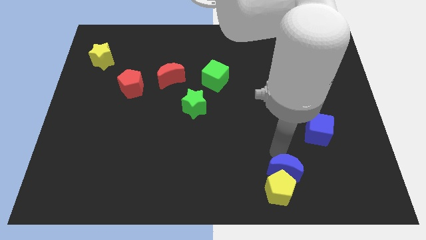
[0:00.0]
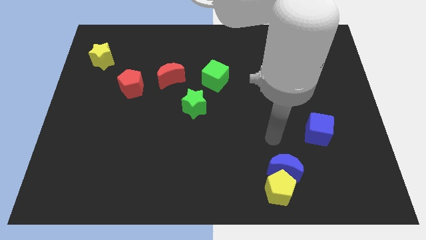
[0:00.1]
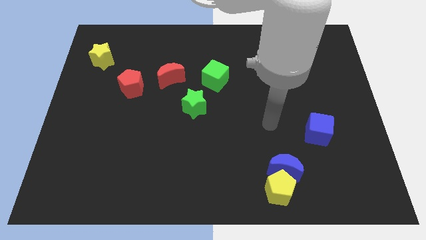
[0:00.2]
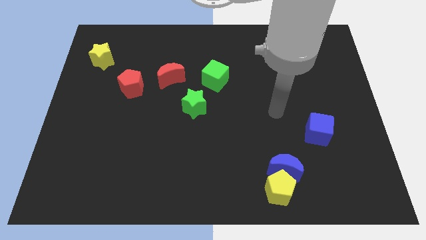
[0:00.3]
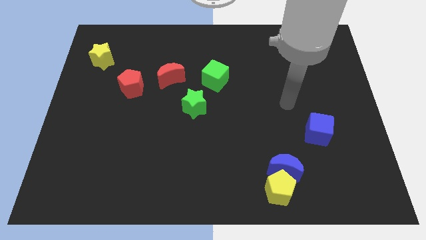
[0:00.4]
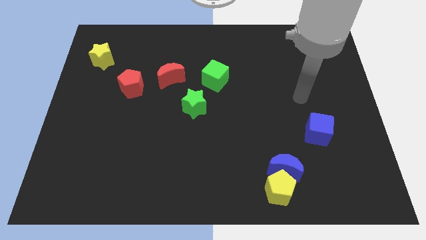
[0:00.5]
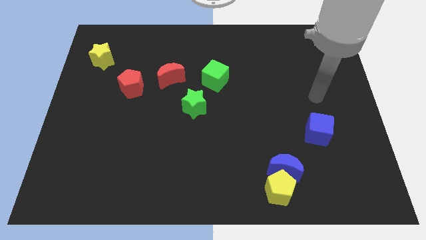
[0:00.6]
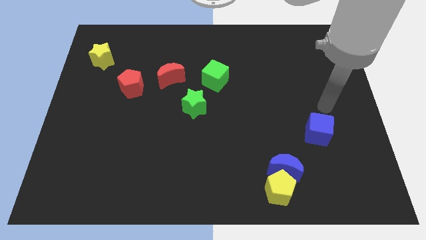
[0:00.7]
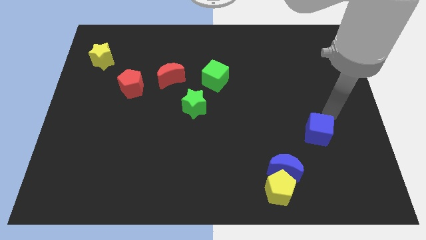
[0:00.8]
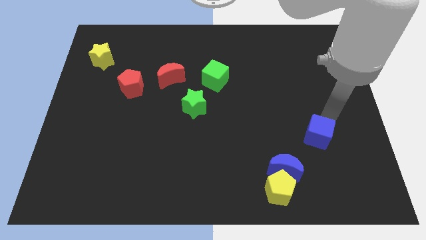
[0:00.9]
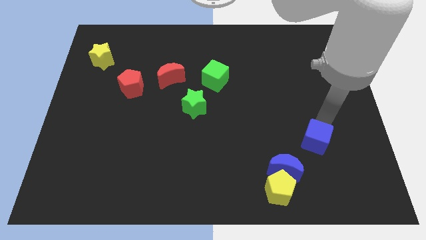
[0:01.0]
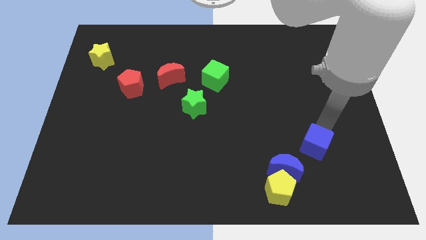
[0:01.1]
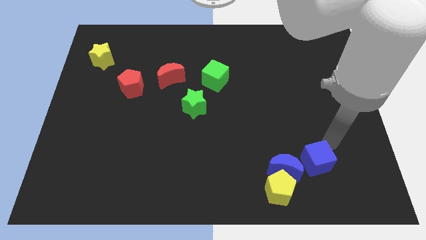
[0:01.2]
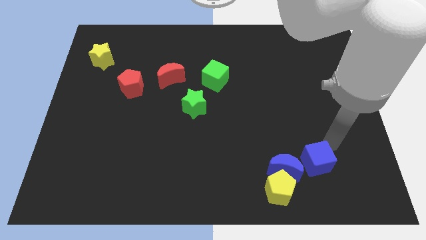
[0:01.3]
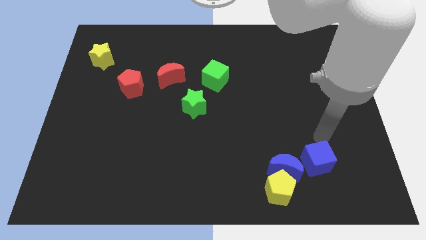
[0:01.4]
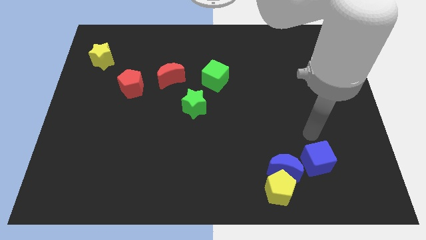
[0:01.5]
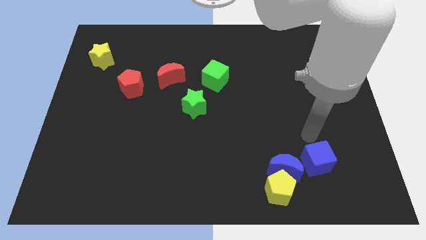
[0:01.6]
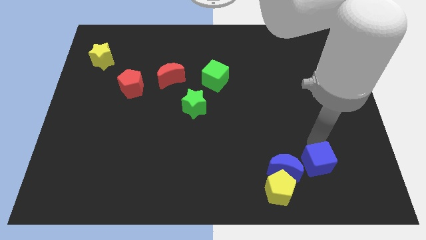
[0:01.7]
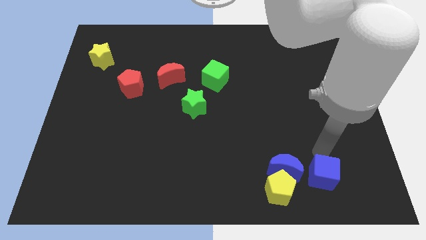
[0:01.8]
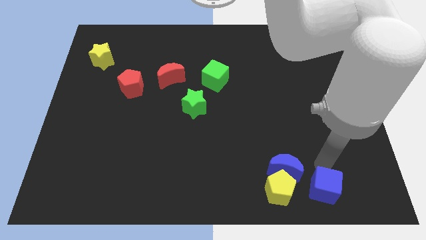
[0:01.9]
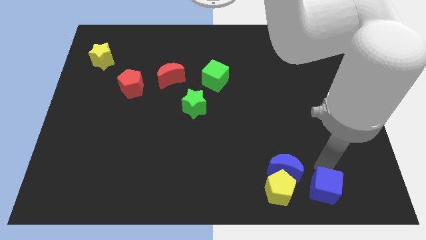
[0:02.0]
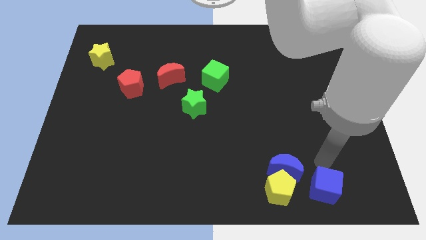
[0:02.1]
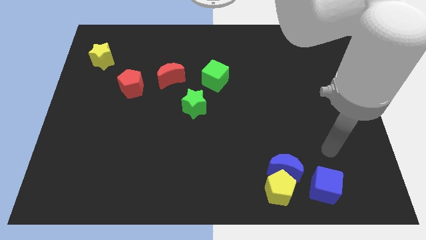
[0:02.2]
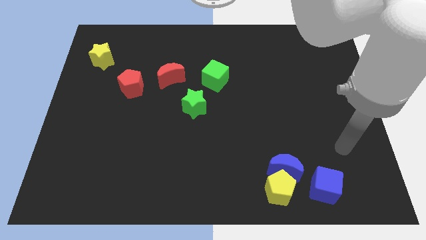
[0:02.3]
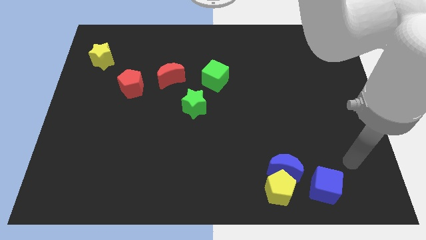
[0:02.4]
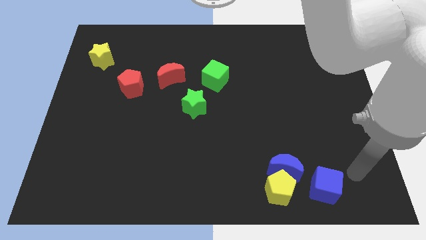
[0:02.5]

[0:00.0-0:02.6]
push blue cube parallel to the right of yellow pentagon

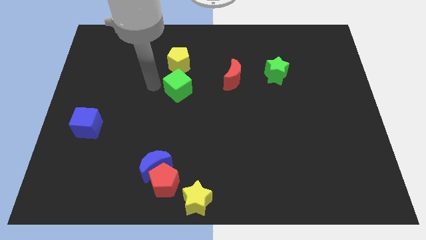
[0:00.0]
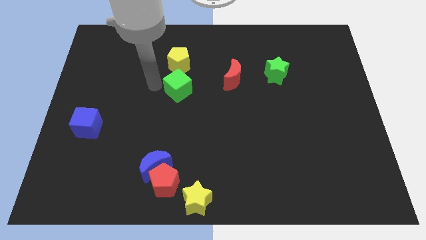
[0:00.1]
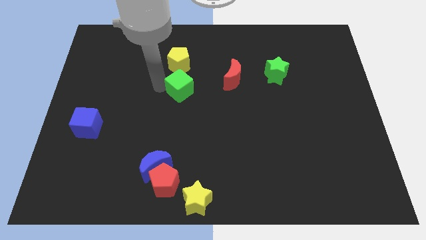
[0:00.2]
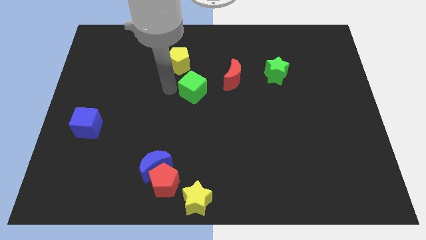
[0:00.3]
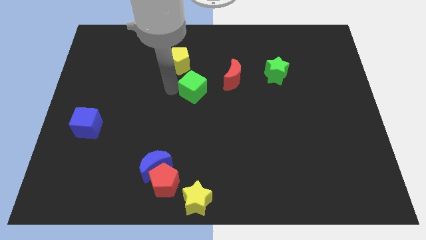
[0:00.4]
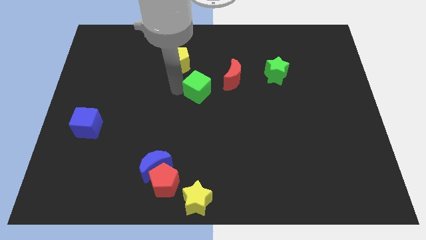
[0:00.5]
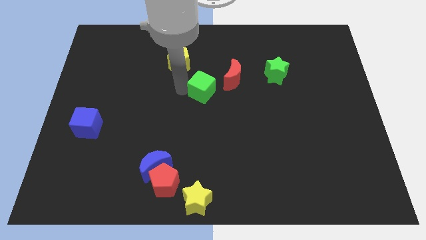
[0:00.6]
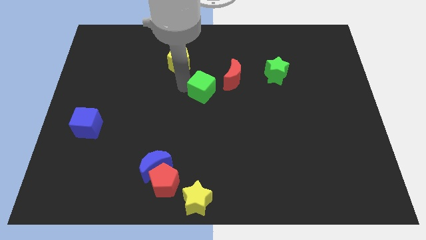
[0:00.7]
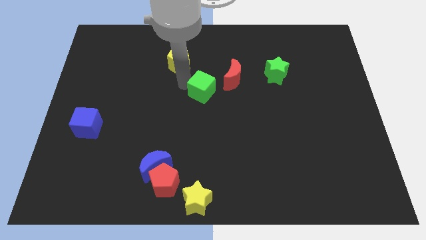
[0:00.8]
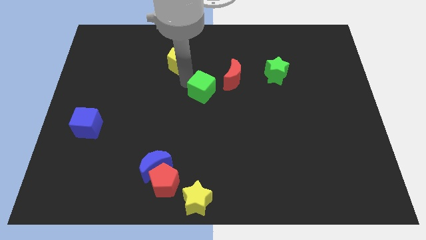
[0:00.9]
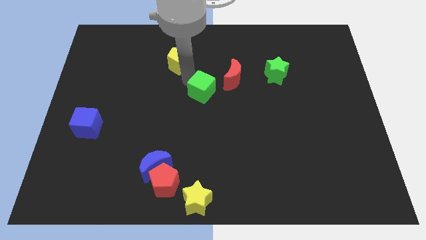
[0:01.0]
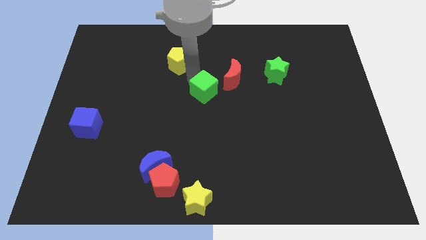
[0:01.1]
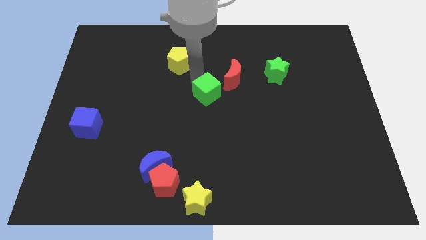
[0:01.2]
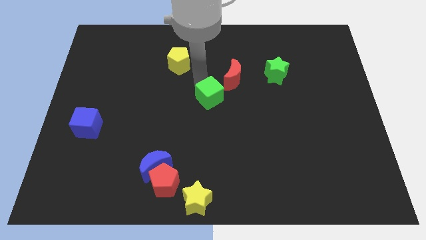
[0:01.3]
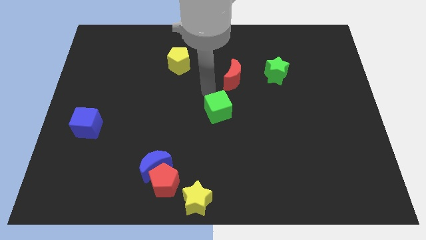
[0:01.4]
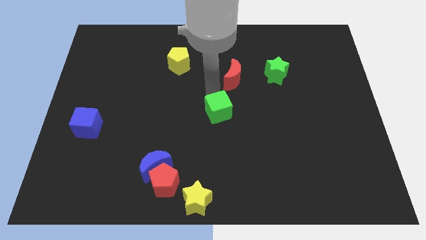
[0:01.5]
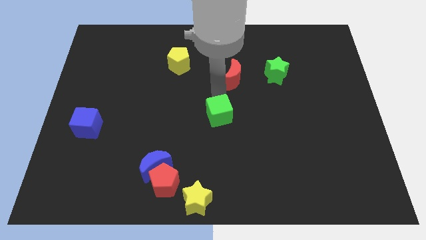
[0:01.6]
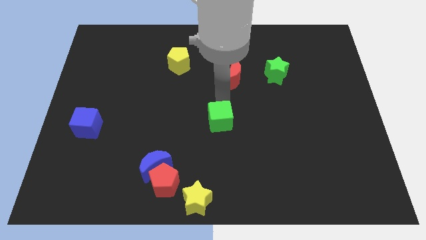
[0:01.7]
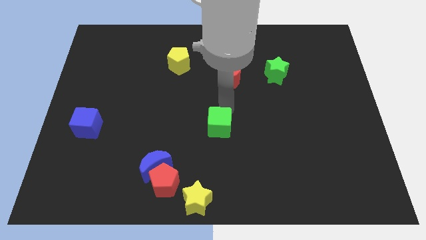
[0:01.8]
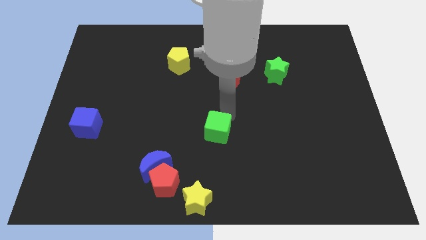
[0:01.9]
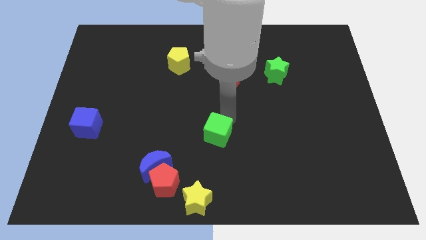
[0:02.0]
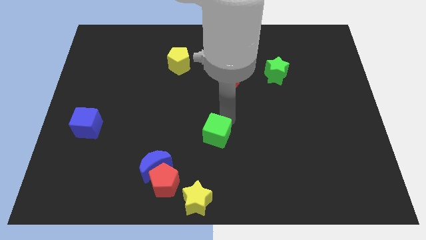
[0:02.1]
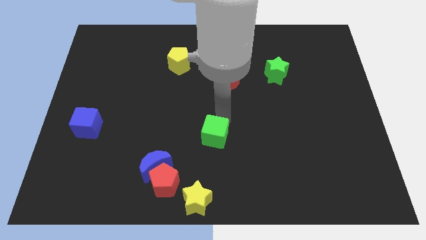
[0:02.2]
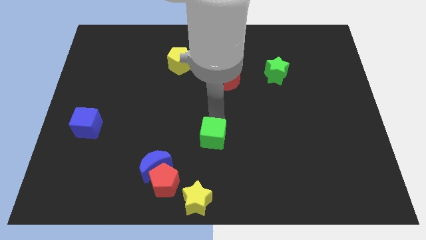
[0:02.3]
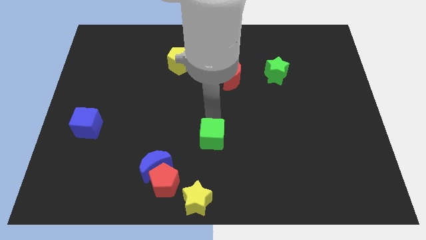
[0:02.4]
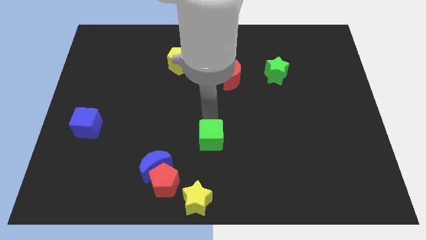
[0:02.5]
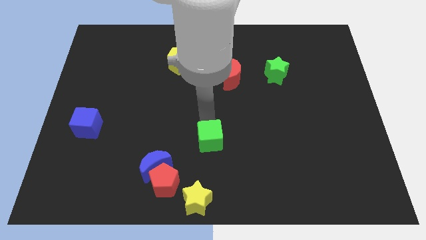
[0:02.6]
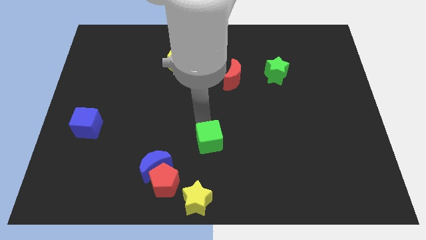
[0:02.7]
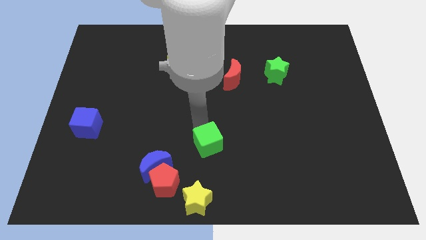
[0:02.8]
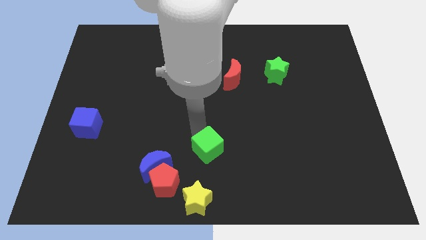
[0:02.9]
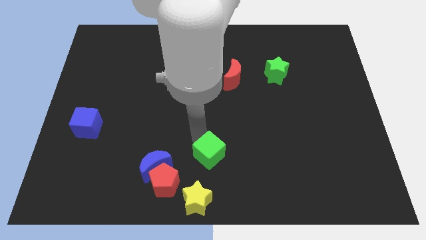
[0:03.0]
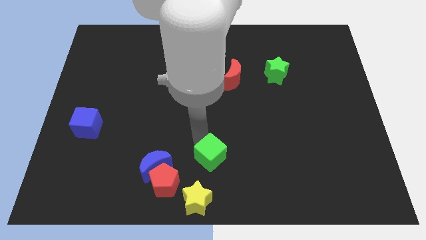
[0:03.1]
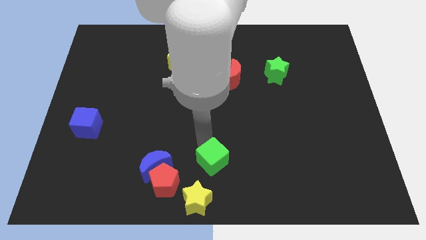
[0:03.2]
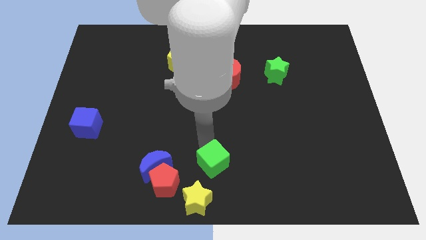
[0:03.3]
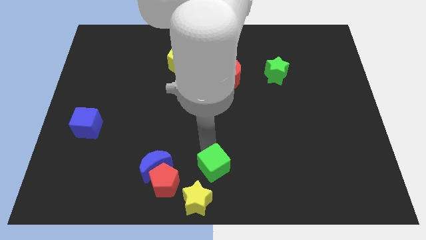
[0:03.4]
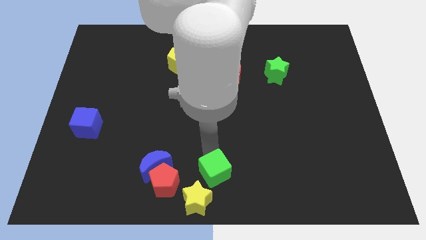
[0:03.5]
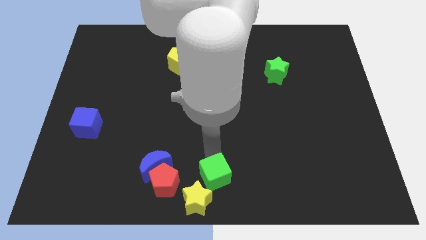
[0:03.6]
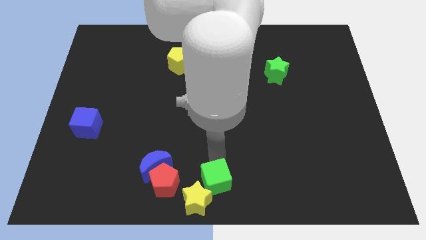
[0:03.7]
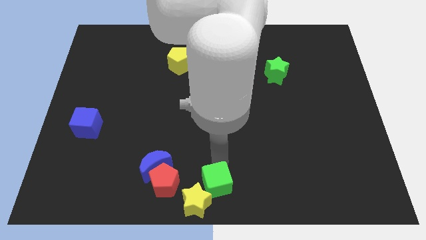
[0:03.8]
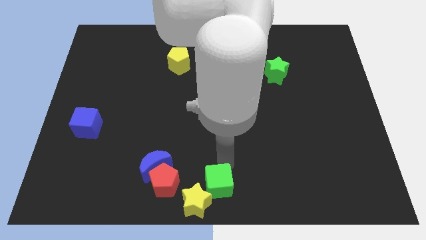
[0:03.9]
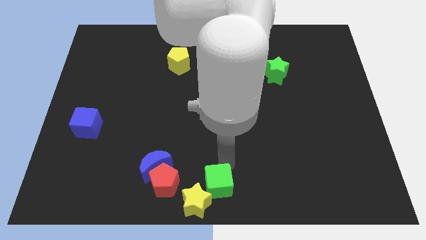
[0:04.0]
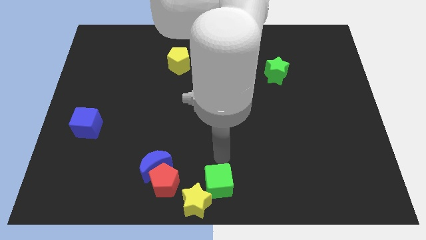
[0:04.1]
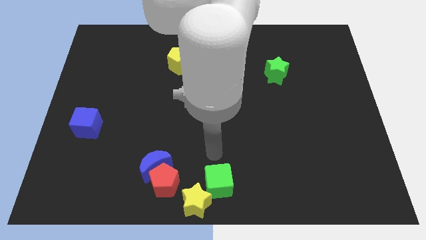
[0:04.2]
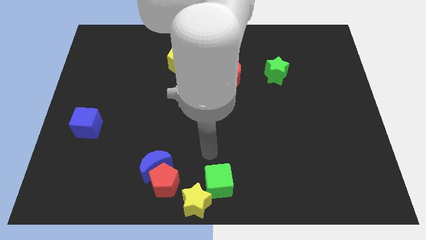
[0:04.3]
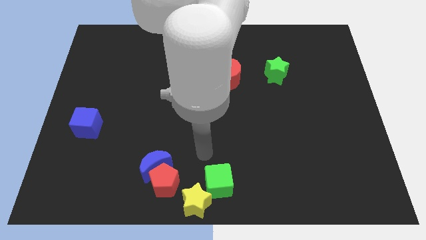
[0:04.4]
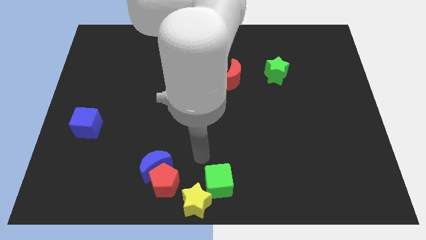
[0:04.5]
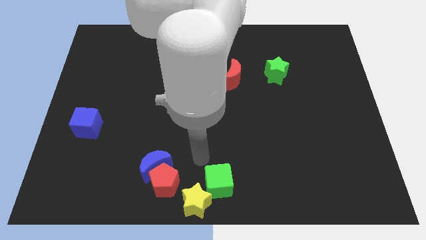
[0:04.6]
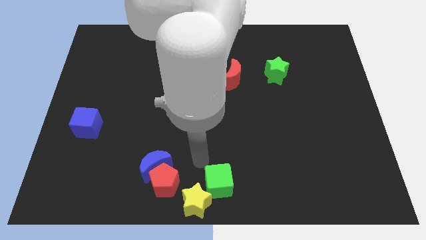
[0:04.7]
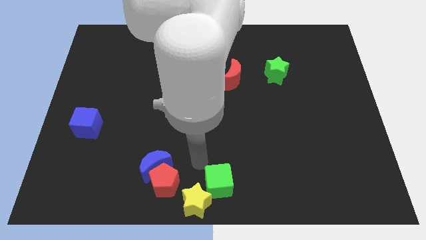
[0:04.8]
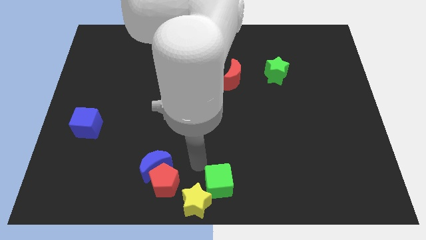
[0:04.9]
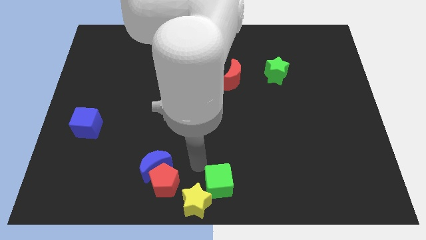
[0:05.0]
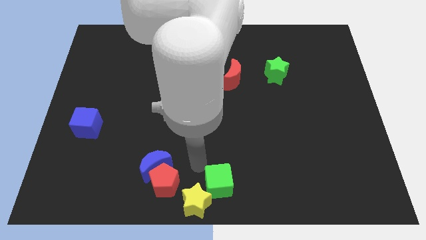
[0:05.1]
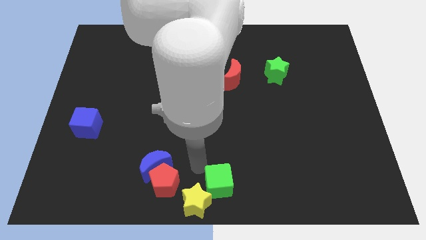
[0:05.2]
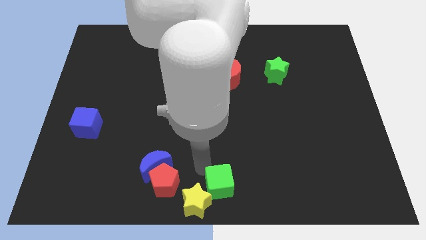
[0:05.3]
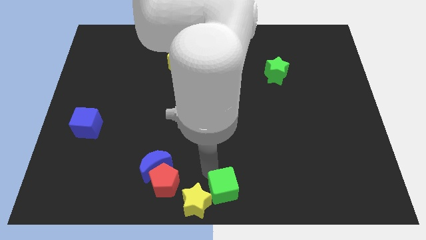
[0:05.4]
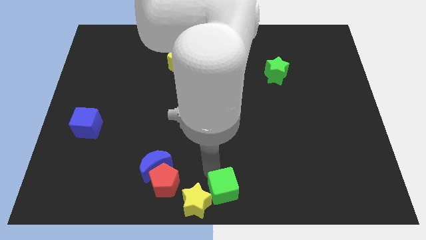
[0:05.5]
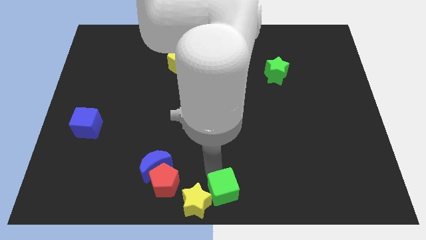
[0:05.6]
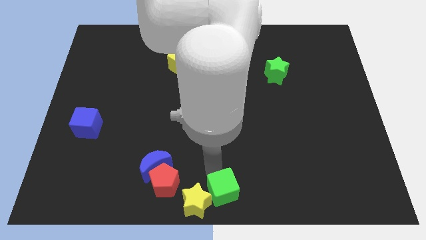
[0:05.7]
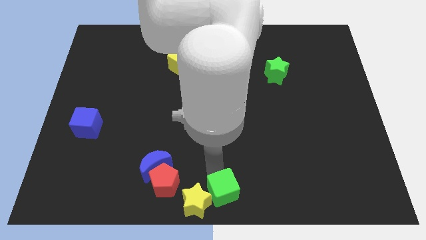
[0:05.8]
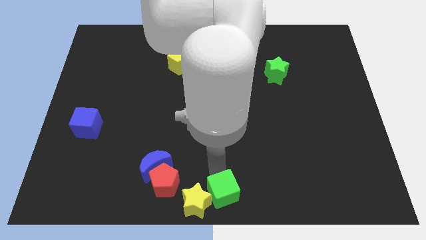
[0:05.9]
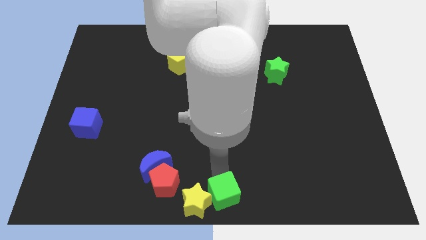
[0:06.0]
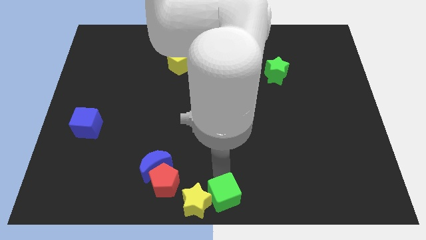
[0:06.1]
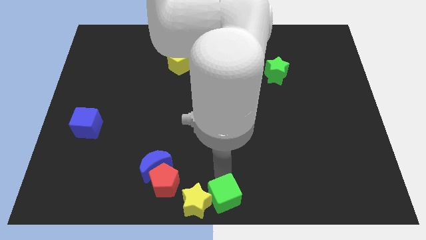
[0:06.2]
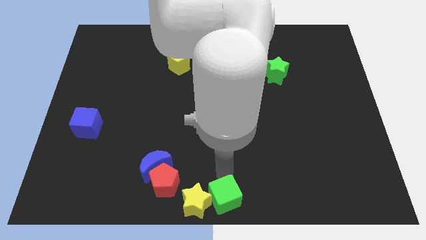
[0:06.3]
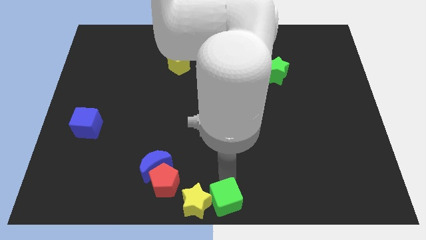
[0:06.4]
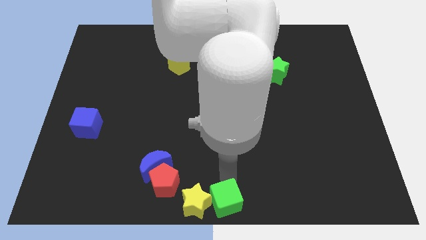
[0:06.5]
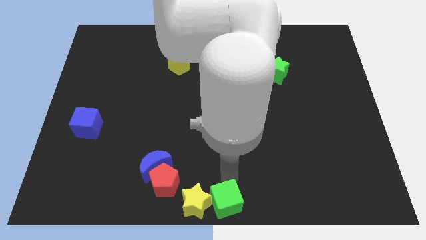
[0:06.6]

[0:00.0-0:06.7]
drag the green cube to the bottom center
